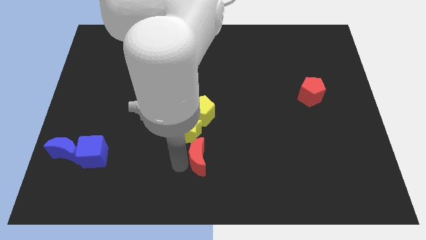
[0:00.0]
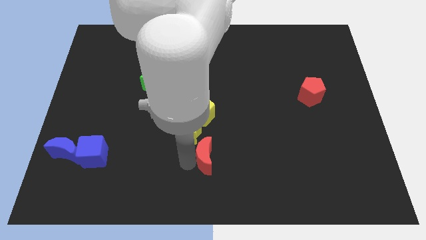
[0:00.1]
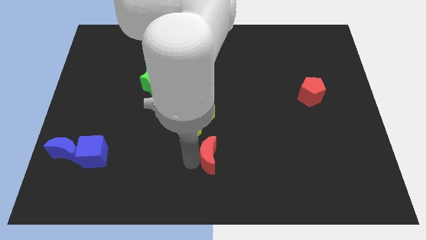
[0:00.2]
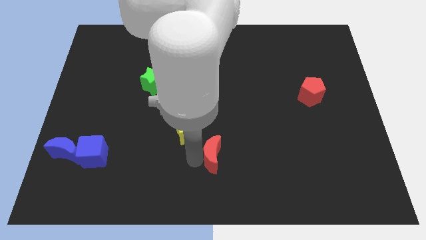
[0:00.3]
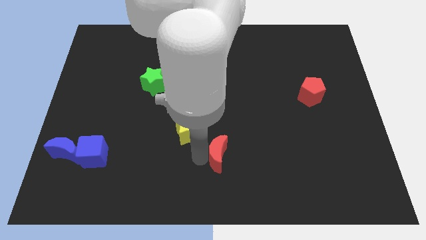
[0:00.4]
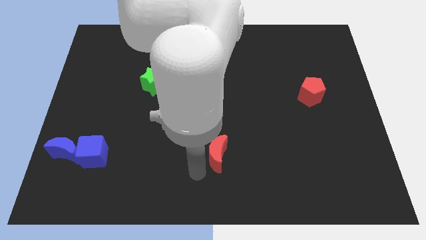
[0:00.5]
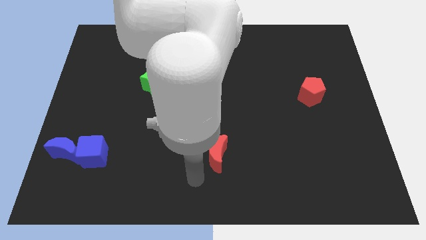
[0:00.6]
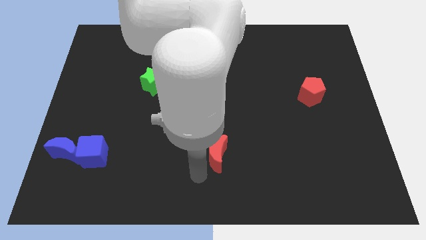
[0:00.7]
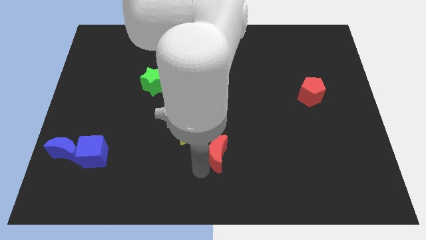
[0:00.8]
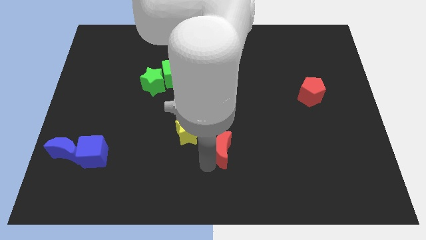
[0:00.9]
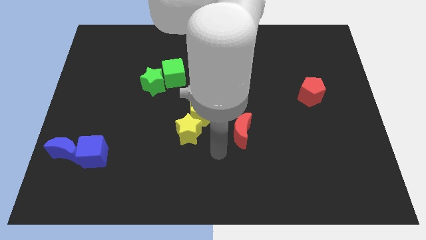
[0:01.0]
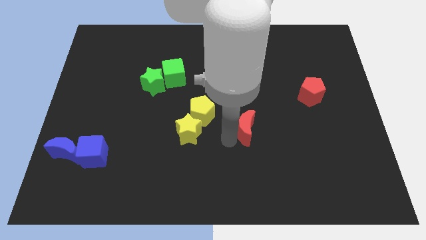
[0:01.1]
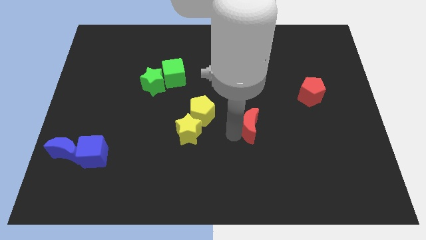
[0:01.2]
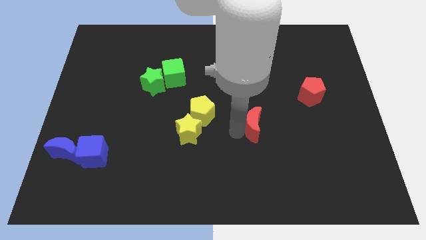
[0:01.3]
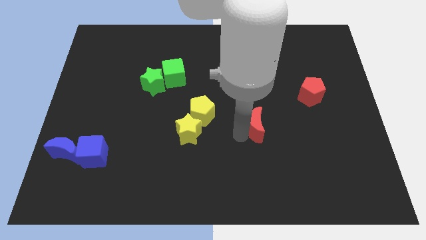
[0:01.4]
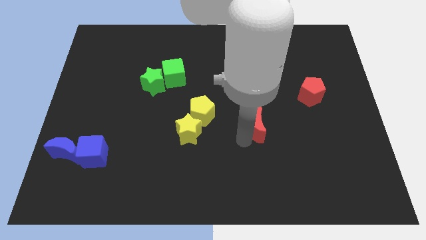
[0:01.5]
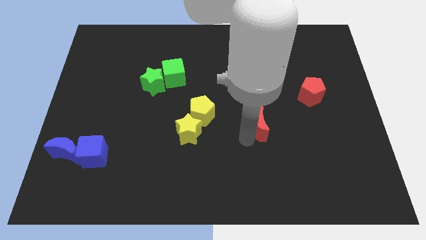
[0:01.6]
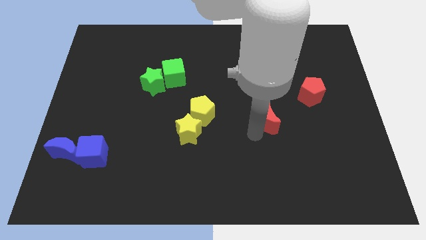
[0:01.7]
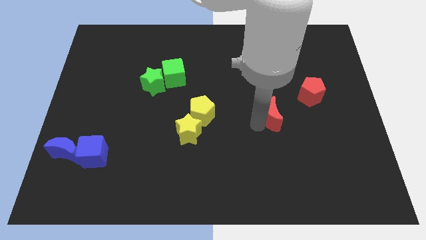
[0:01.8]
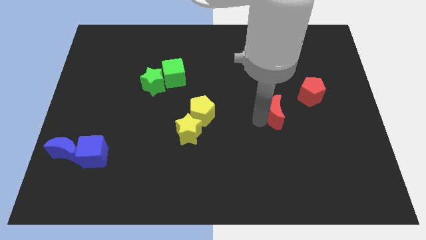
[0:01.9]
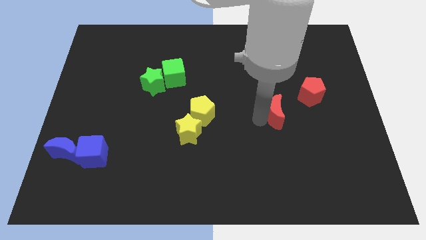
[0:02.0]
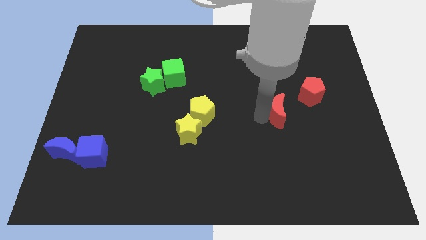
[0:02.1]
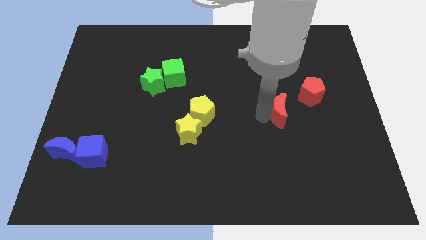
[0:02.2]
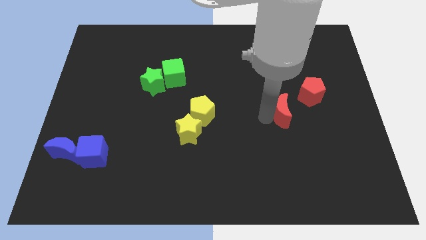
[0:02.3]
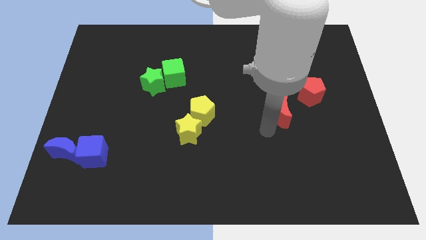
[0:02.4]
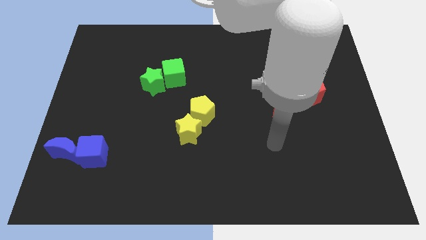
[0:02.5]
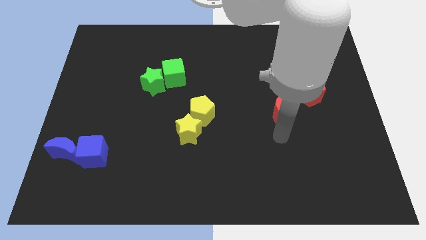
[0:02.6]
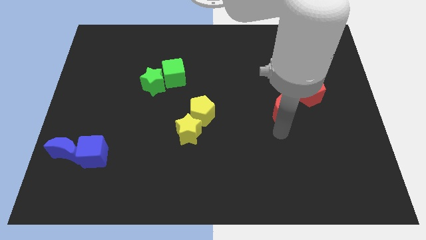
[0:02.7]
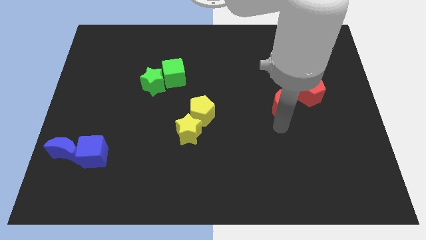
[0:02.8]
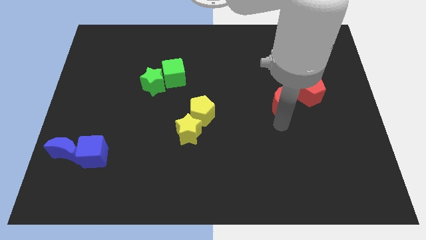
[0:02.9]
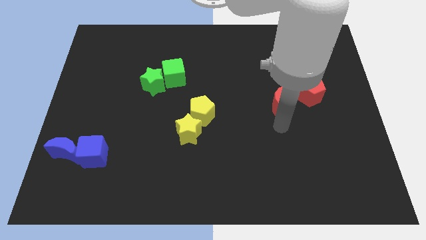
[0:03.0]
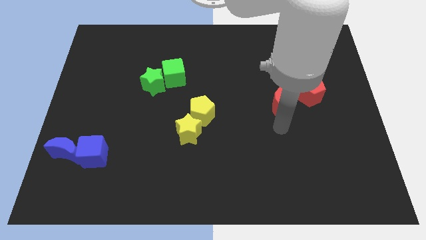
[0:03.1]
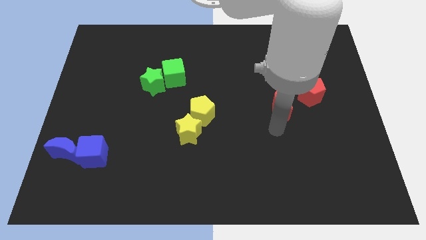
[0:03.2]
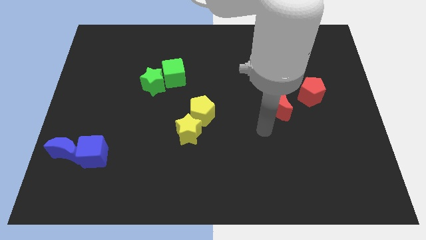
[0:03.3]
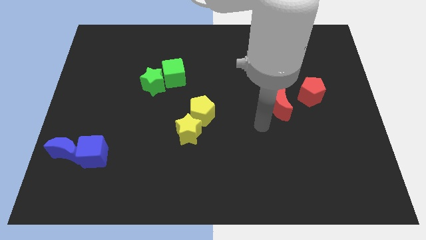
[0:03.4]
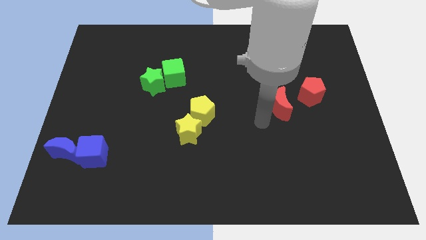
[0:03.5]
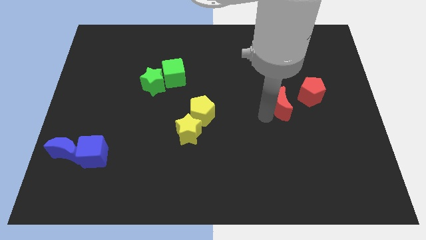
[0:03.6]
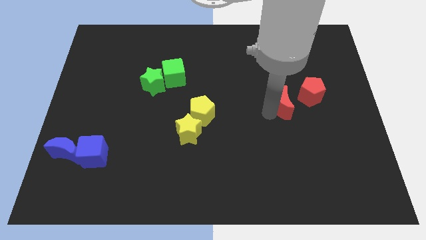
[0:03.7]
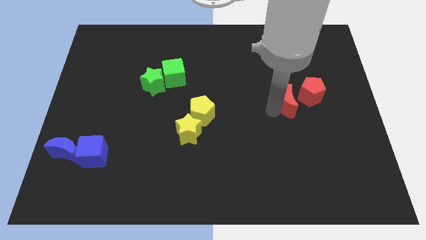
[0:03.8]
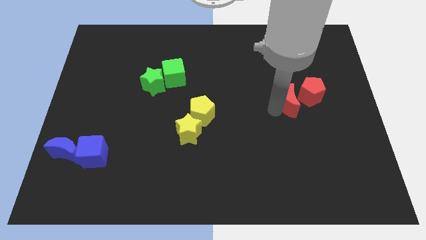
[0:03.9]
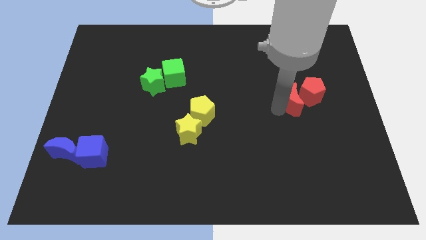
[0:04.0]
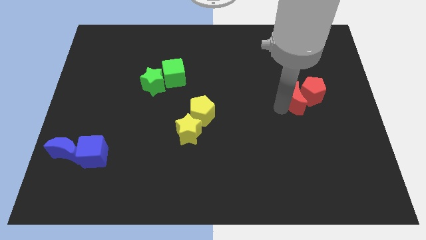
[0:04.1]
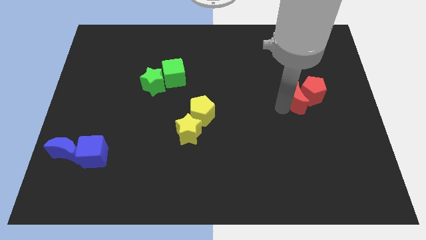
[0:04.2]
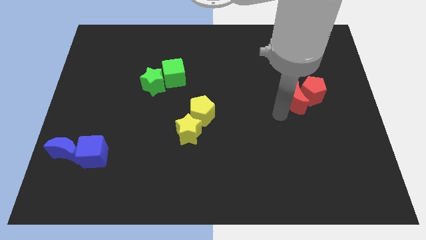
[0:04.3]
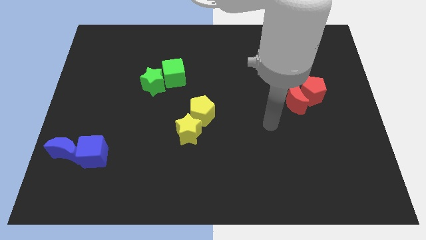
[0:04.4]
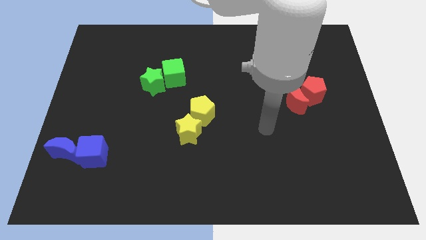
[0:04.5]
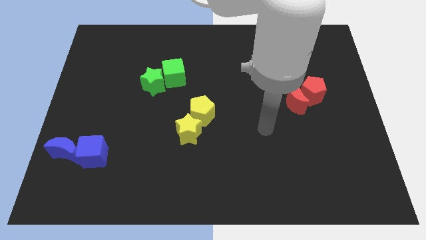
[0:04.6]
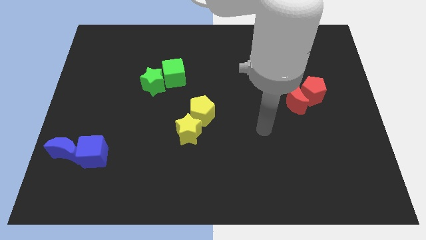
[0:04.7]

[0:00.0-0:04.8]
push the red moon into the red pentagon

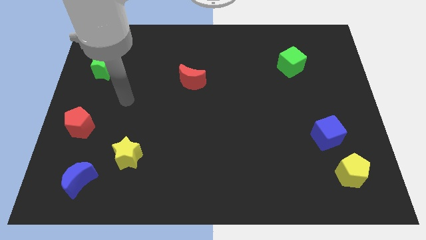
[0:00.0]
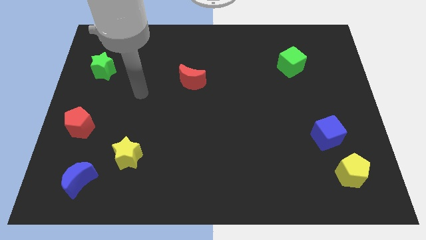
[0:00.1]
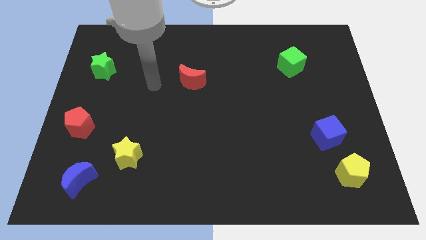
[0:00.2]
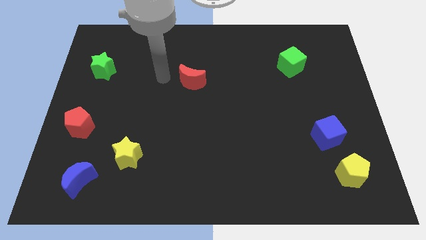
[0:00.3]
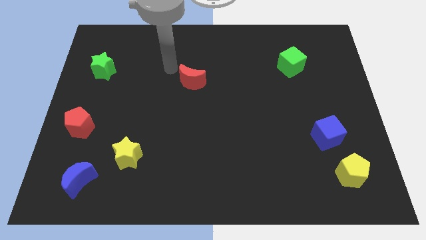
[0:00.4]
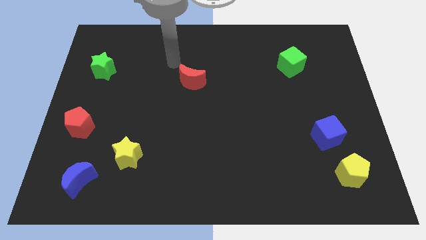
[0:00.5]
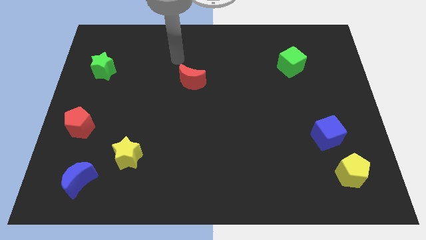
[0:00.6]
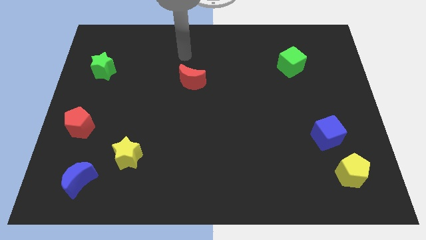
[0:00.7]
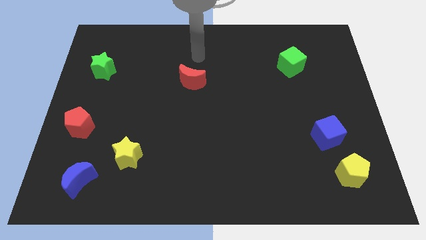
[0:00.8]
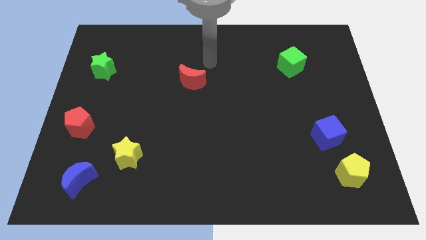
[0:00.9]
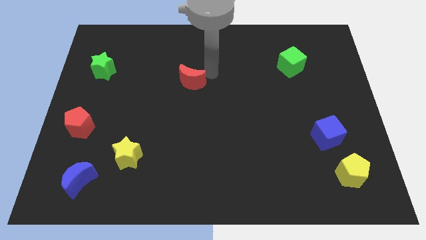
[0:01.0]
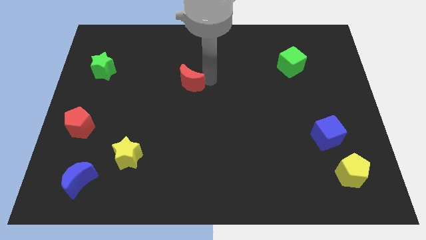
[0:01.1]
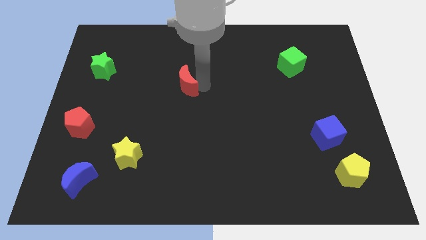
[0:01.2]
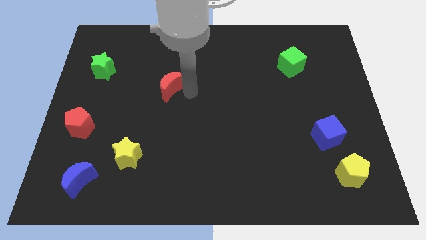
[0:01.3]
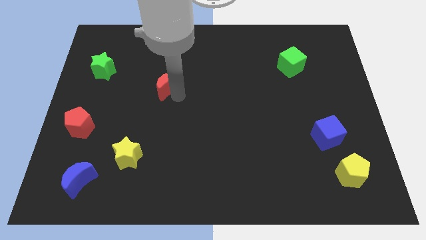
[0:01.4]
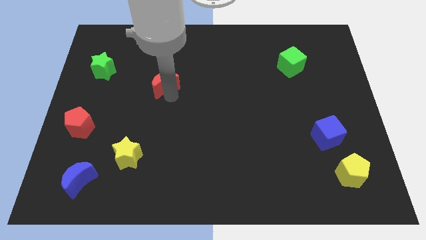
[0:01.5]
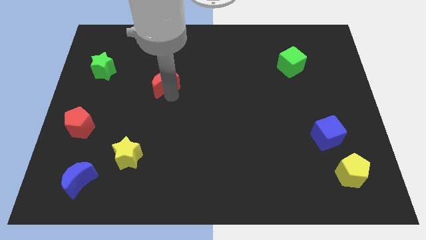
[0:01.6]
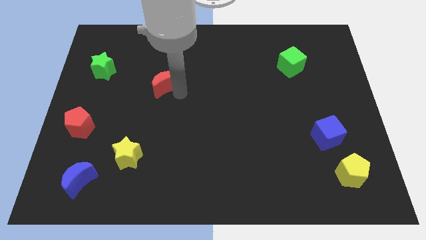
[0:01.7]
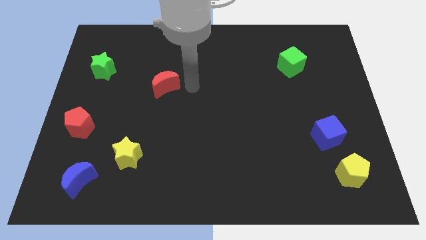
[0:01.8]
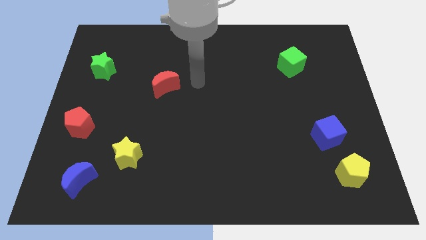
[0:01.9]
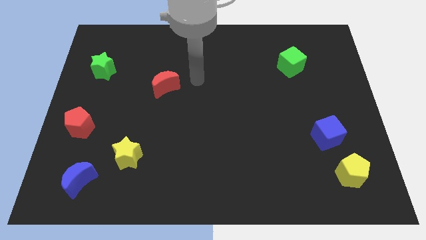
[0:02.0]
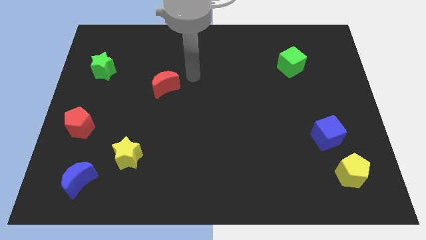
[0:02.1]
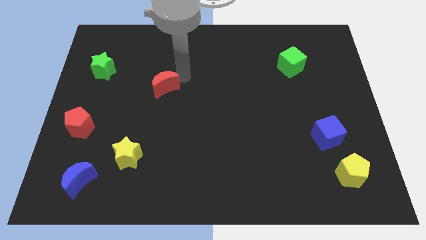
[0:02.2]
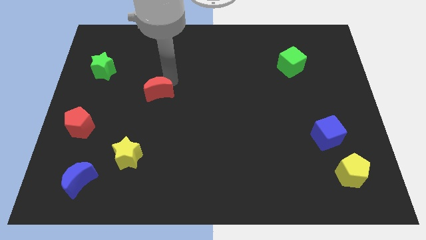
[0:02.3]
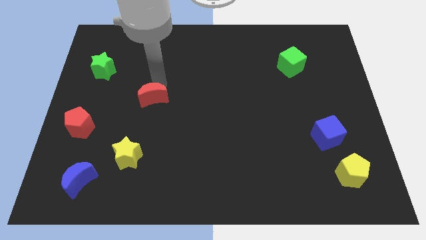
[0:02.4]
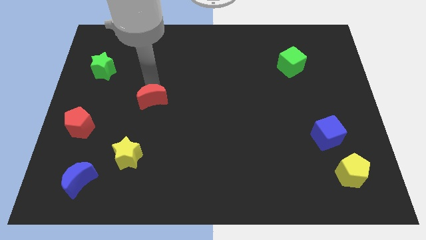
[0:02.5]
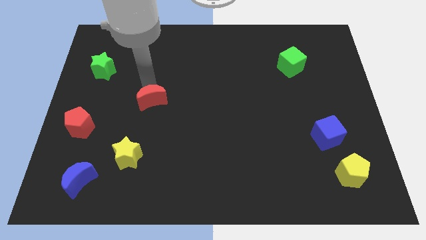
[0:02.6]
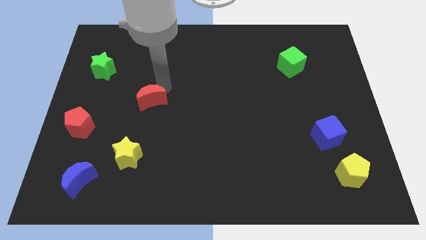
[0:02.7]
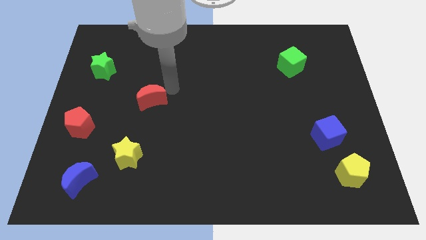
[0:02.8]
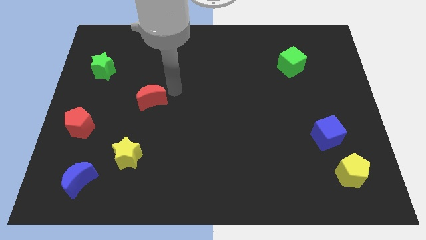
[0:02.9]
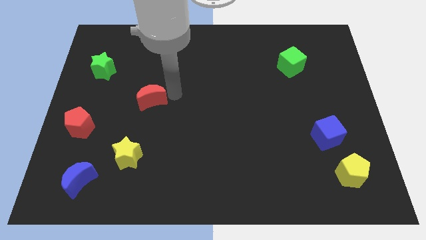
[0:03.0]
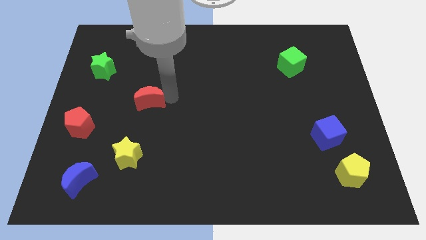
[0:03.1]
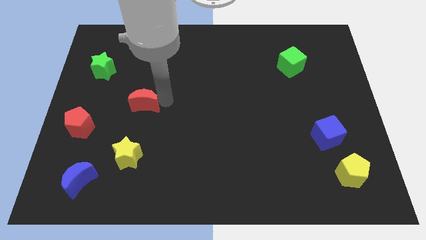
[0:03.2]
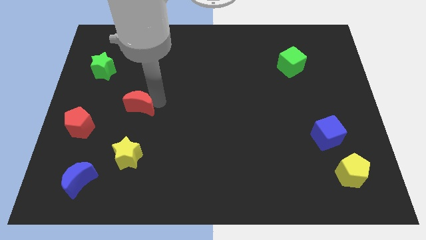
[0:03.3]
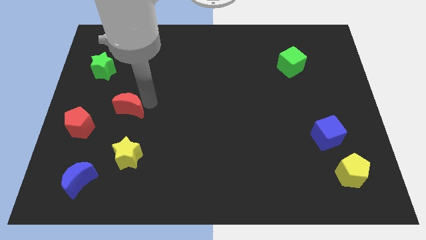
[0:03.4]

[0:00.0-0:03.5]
push the red moon vertically above the yellow star

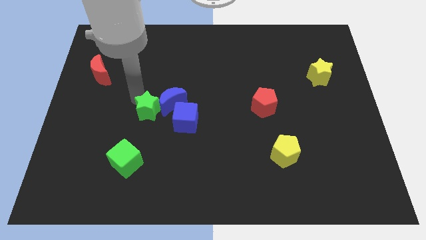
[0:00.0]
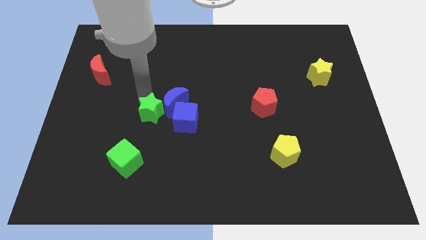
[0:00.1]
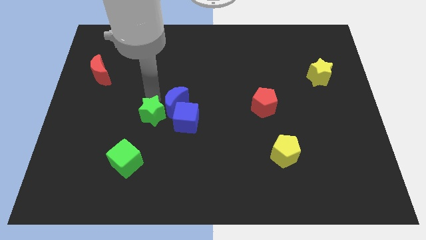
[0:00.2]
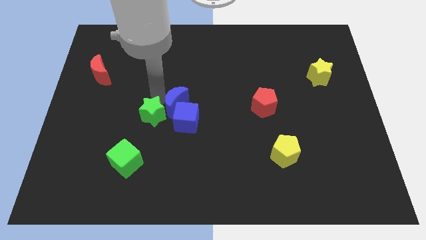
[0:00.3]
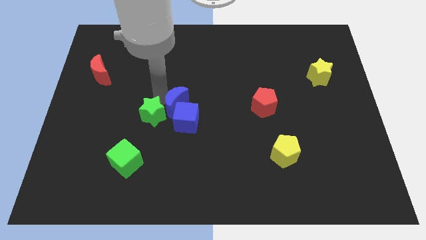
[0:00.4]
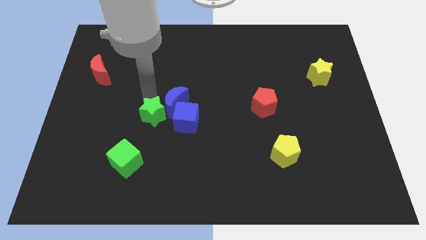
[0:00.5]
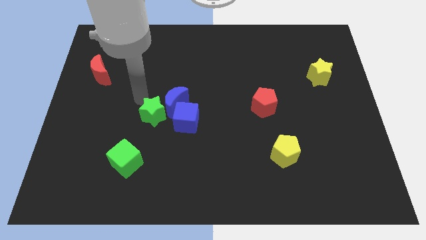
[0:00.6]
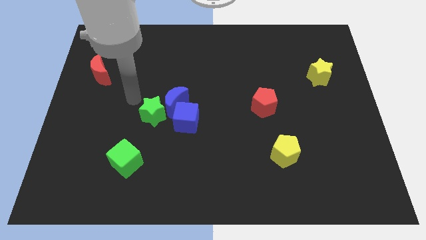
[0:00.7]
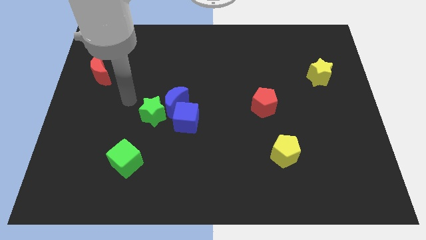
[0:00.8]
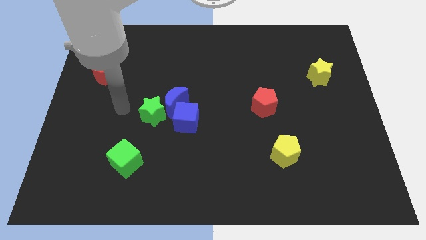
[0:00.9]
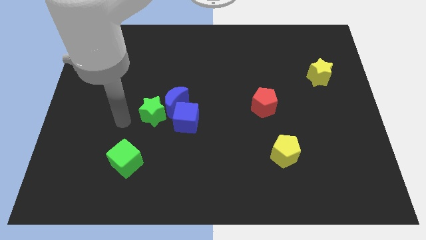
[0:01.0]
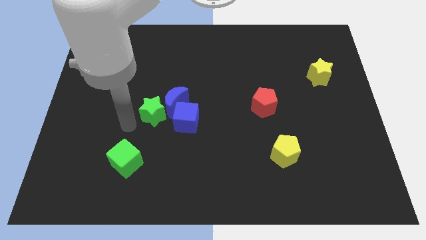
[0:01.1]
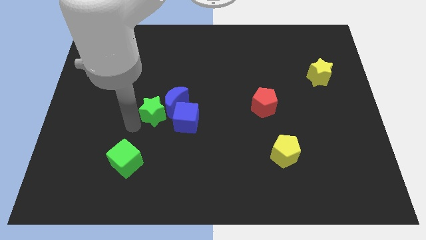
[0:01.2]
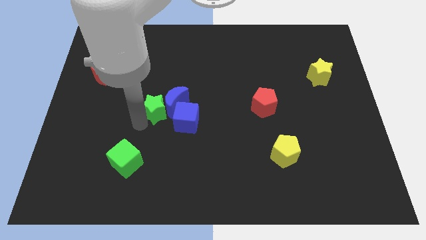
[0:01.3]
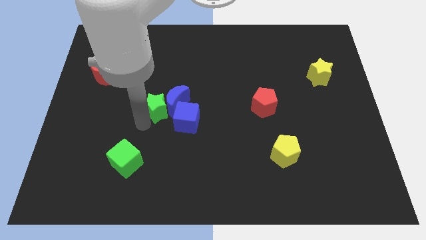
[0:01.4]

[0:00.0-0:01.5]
move green star and blue moon slightly right
